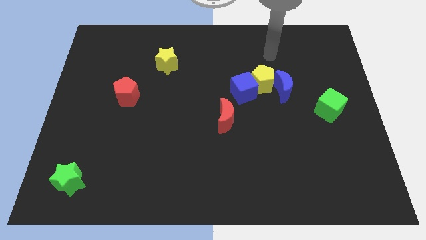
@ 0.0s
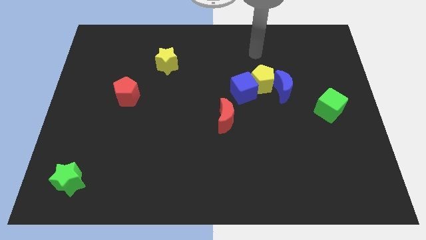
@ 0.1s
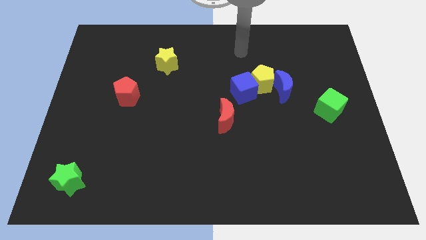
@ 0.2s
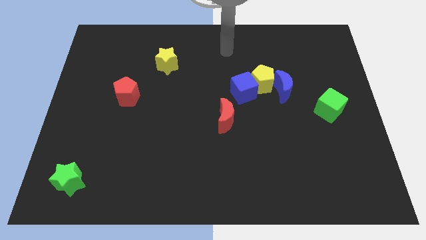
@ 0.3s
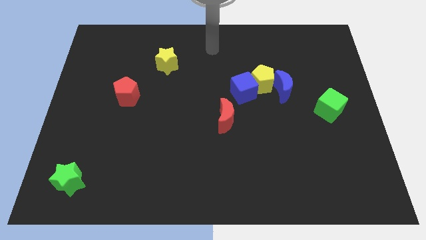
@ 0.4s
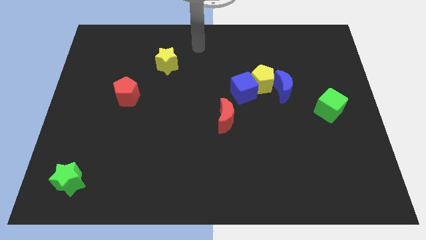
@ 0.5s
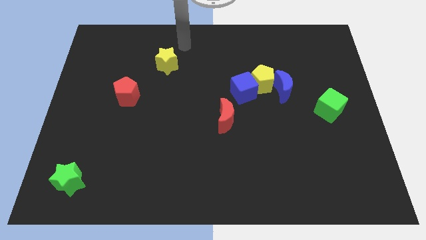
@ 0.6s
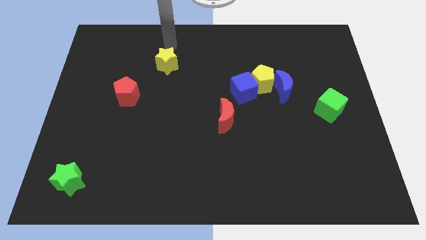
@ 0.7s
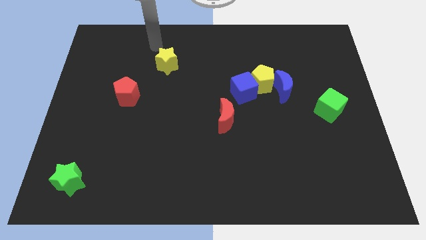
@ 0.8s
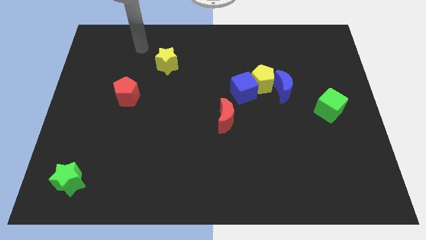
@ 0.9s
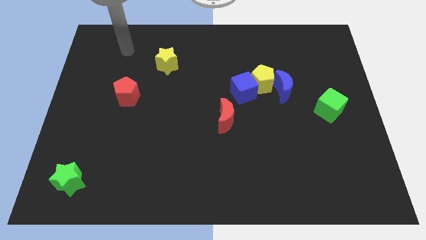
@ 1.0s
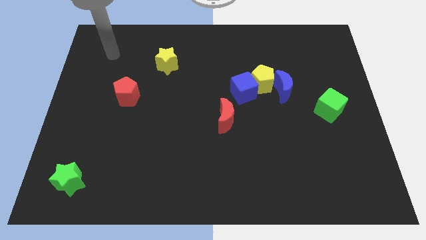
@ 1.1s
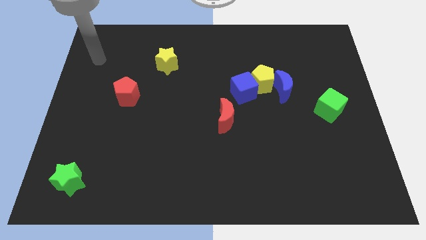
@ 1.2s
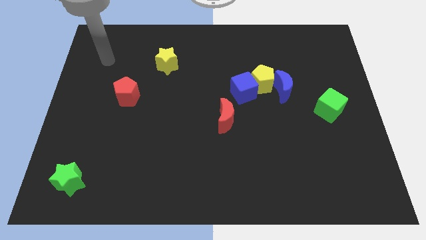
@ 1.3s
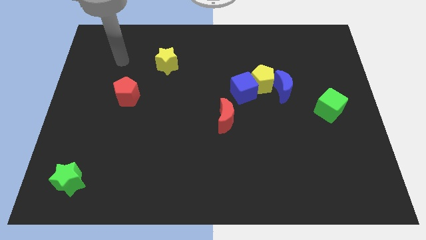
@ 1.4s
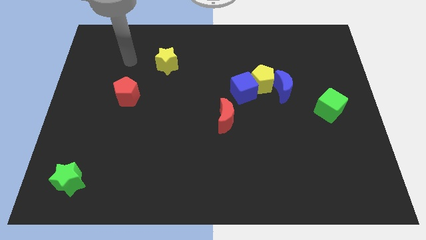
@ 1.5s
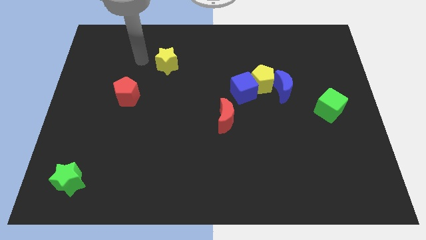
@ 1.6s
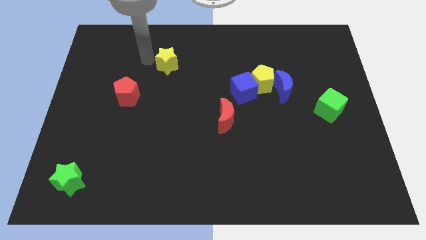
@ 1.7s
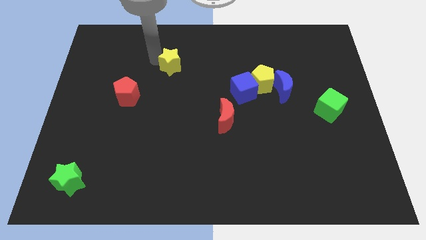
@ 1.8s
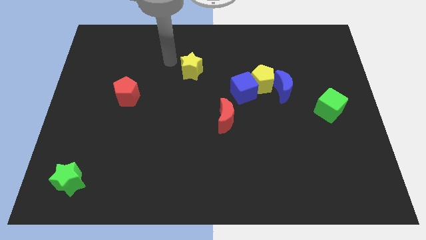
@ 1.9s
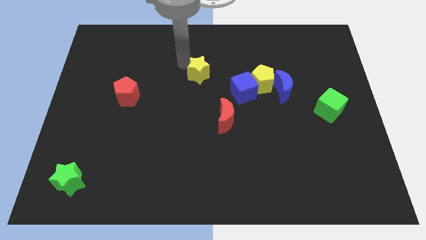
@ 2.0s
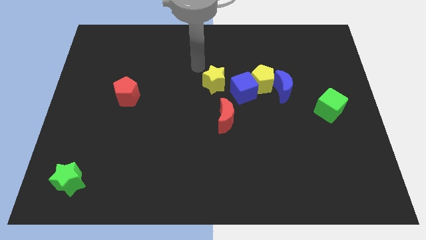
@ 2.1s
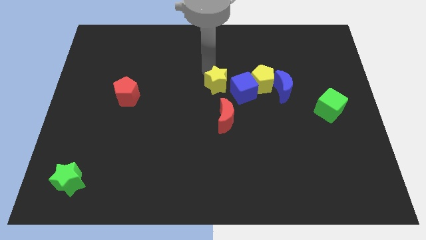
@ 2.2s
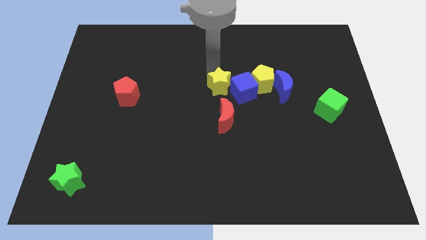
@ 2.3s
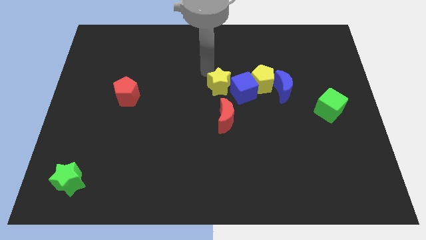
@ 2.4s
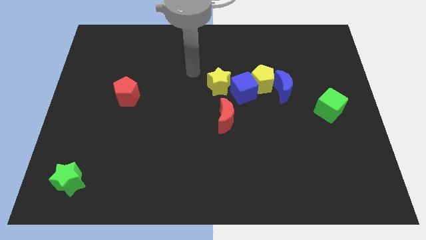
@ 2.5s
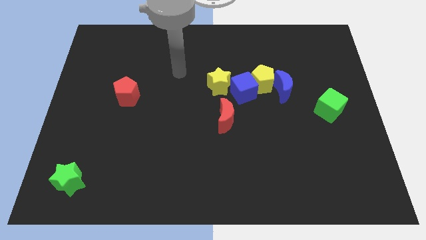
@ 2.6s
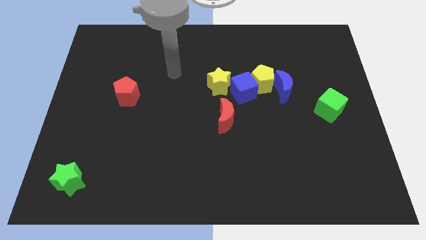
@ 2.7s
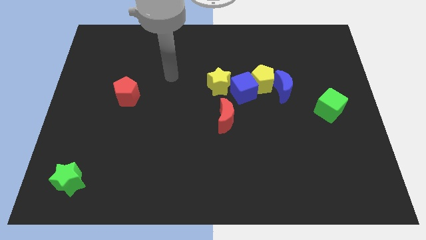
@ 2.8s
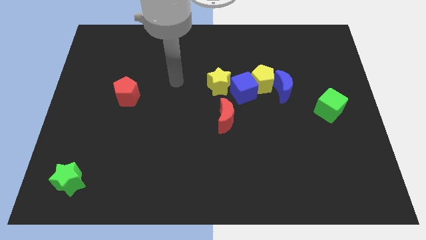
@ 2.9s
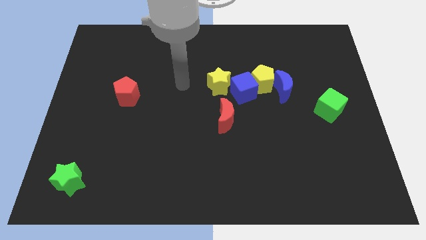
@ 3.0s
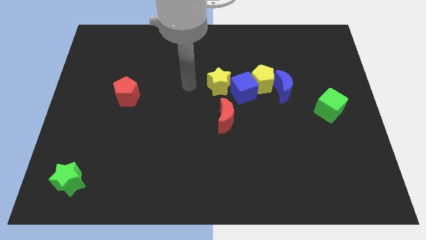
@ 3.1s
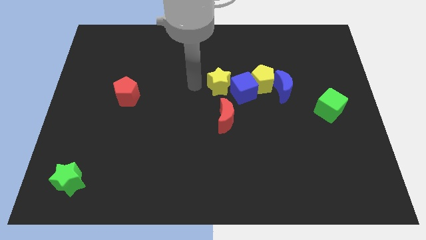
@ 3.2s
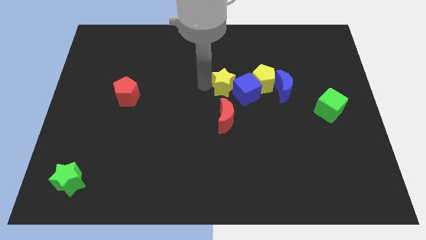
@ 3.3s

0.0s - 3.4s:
slide the yellow star close to the left side of the blue cube

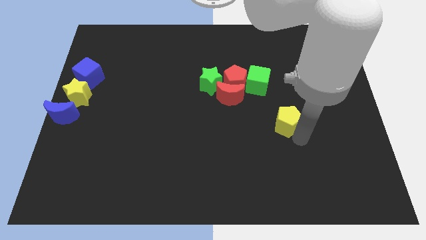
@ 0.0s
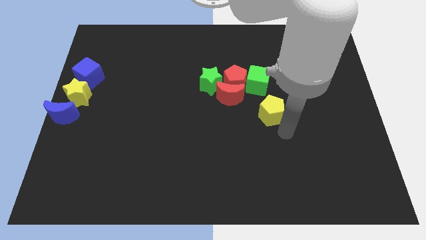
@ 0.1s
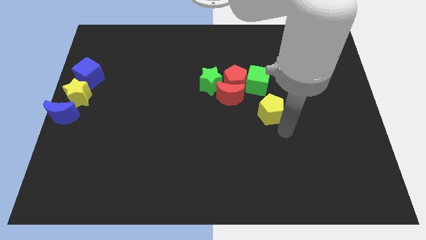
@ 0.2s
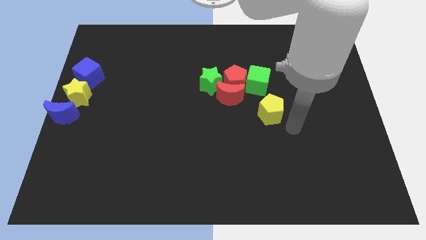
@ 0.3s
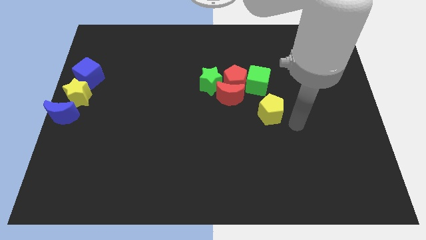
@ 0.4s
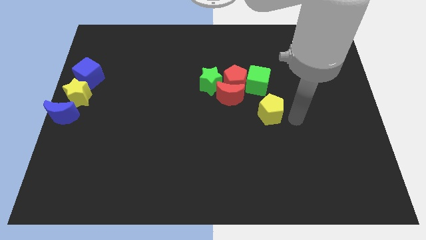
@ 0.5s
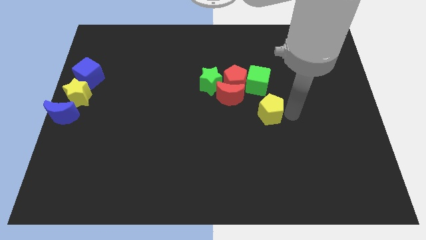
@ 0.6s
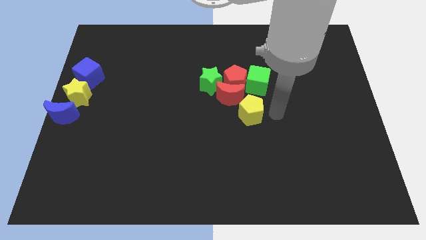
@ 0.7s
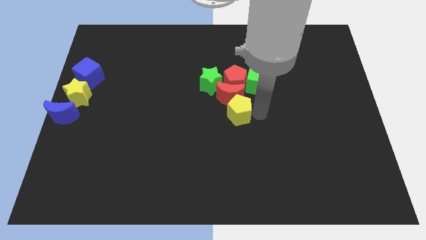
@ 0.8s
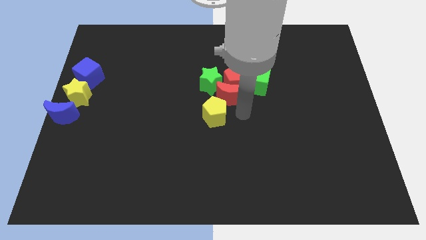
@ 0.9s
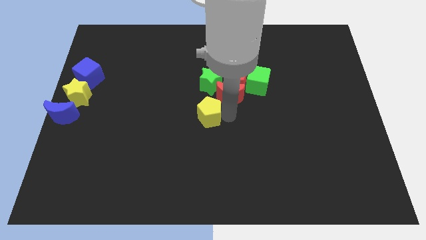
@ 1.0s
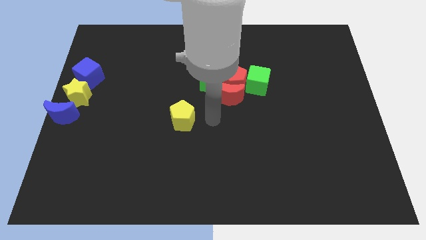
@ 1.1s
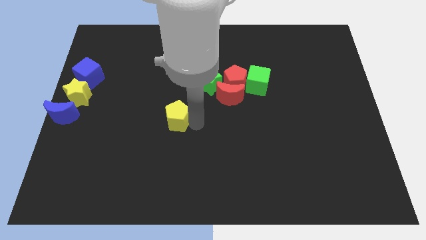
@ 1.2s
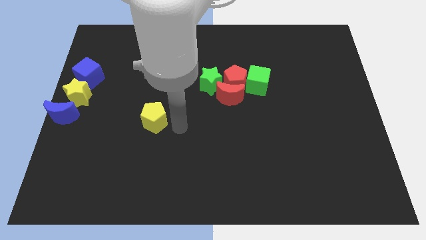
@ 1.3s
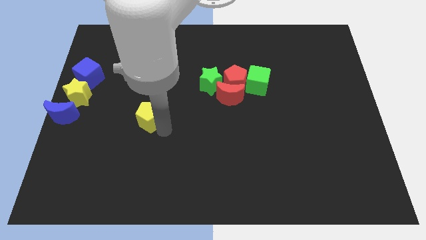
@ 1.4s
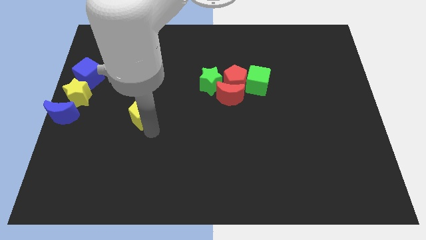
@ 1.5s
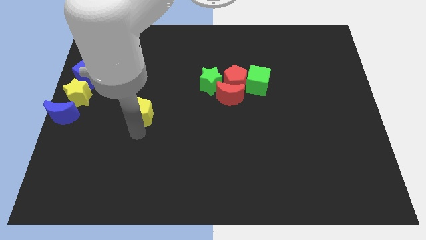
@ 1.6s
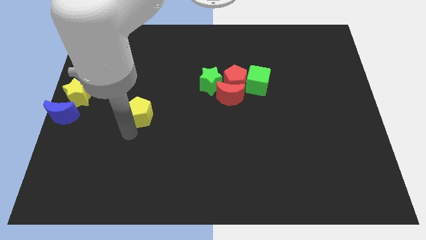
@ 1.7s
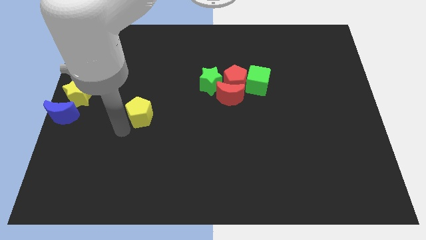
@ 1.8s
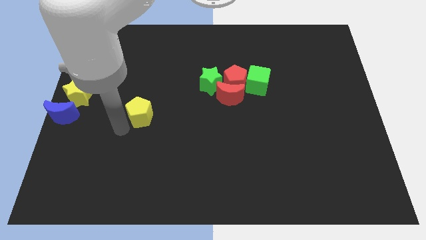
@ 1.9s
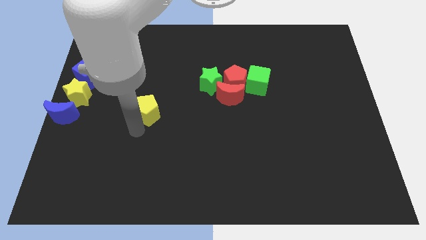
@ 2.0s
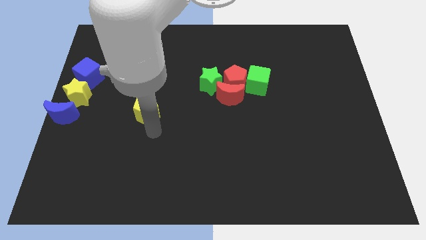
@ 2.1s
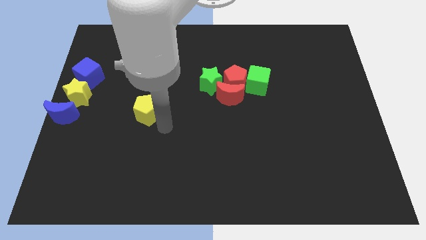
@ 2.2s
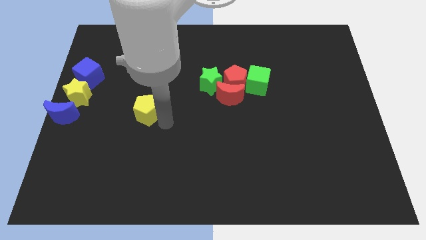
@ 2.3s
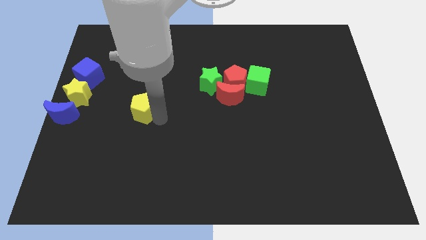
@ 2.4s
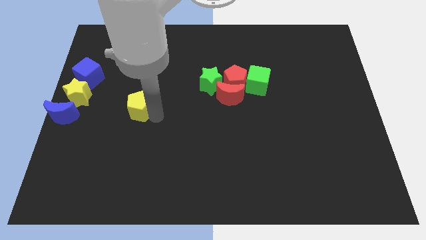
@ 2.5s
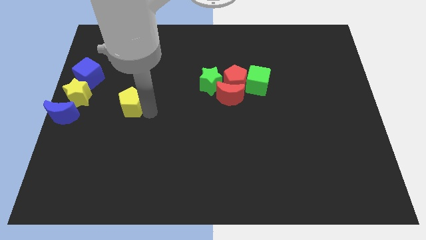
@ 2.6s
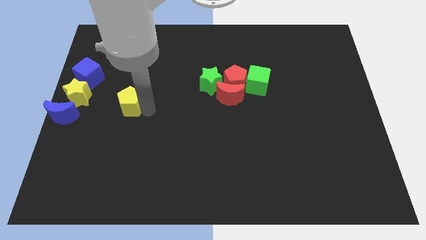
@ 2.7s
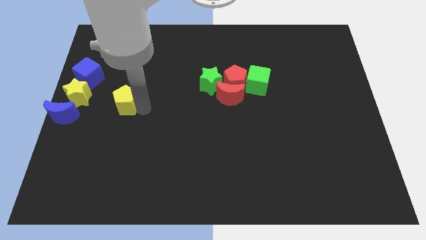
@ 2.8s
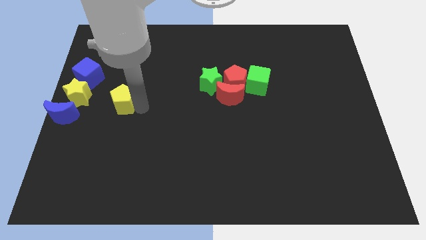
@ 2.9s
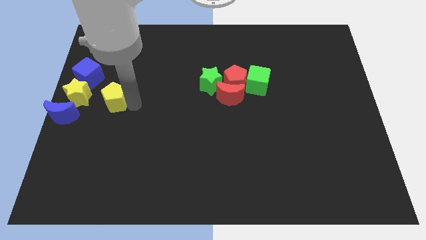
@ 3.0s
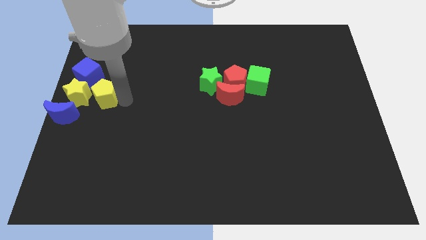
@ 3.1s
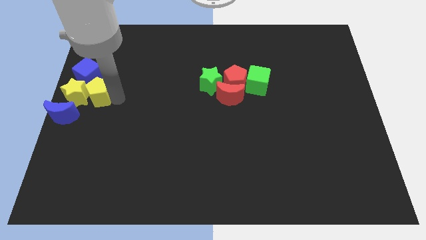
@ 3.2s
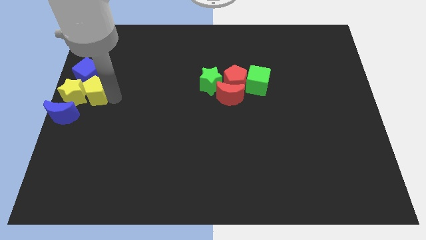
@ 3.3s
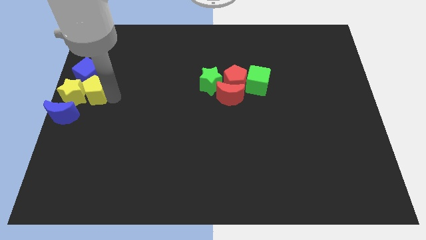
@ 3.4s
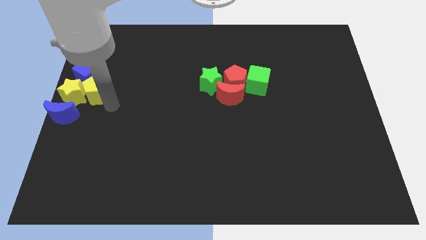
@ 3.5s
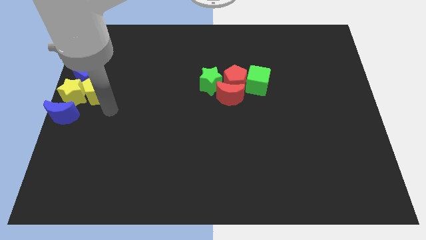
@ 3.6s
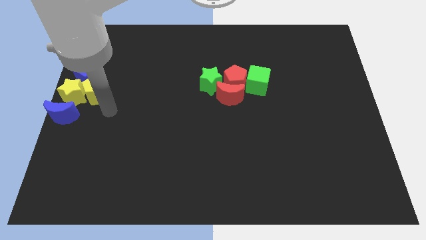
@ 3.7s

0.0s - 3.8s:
slide the yellow pentagon to the center left

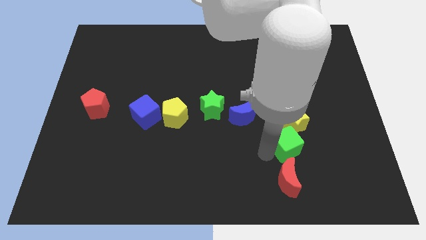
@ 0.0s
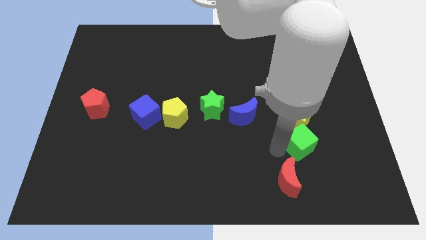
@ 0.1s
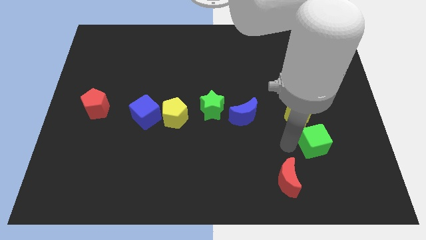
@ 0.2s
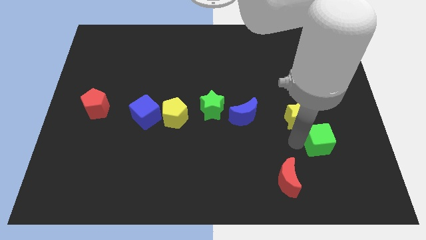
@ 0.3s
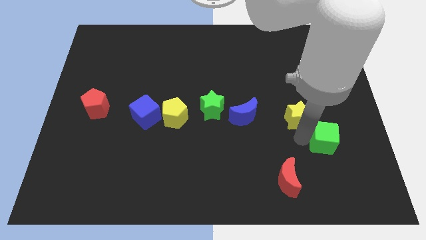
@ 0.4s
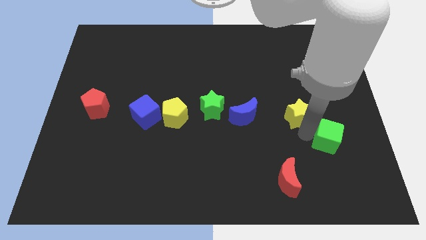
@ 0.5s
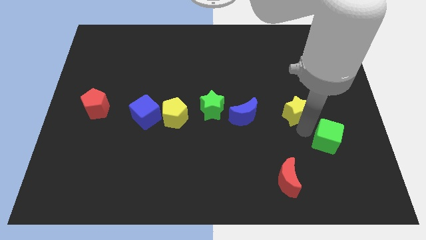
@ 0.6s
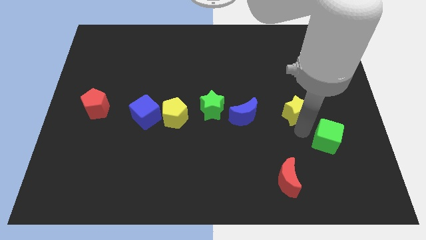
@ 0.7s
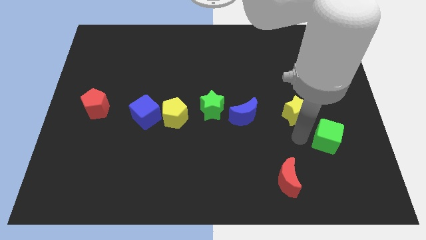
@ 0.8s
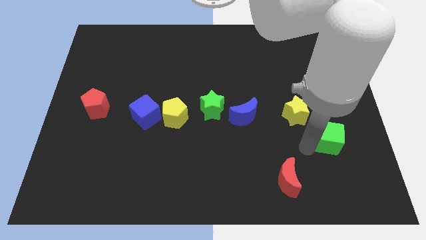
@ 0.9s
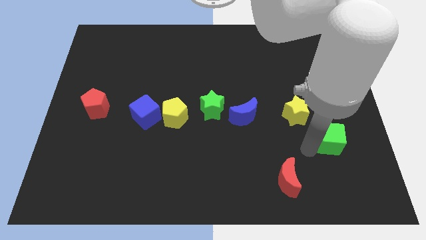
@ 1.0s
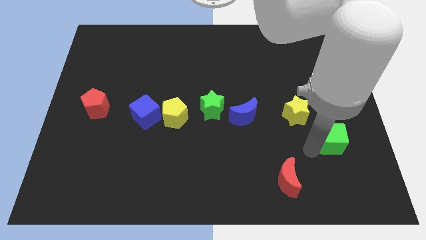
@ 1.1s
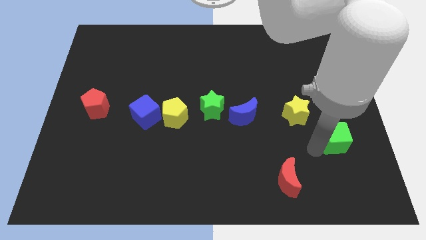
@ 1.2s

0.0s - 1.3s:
push the green cube to the right side of the board

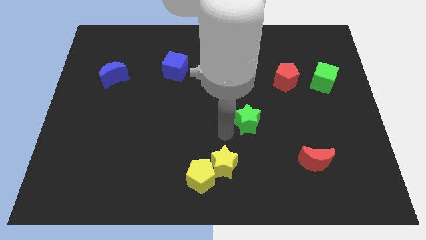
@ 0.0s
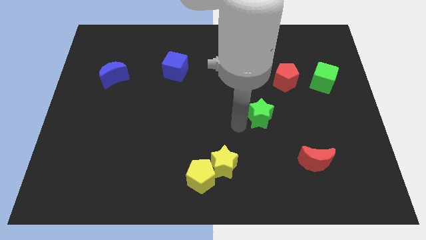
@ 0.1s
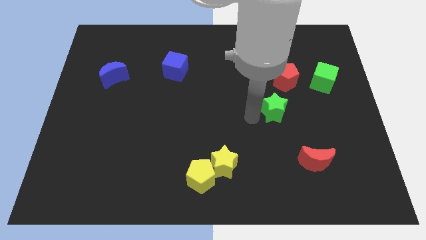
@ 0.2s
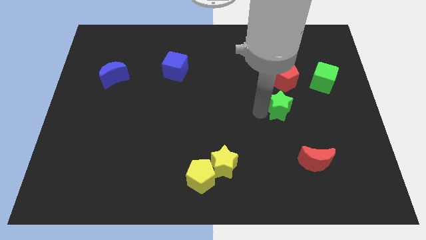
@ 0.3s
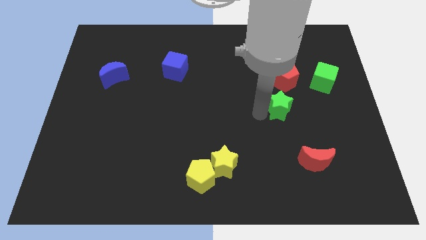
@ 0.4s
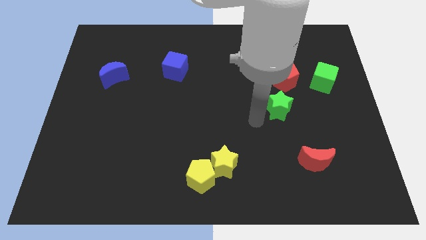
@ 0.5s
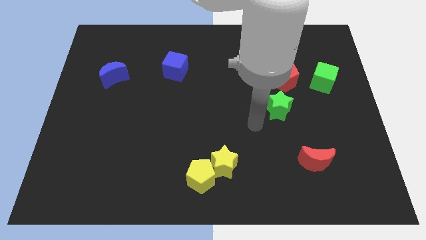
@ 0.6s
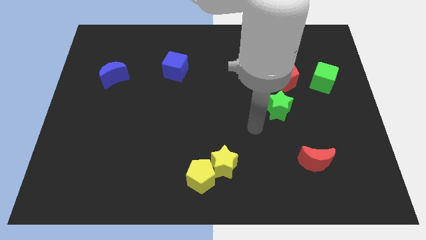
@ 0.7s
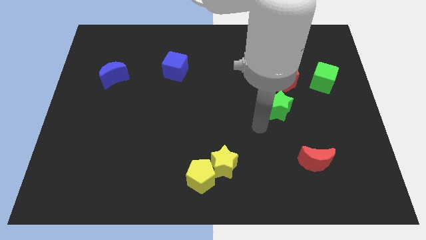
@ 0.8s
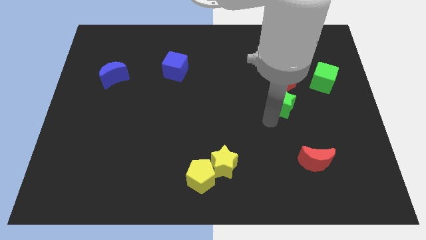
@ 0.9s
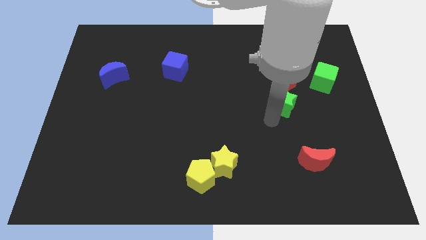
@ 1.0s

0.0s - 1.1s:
place the green star below the red pentagon
